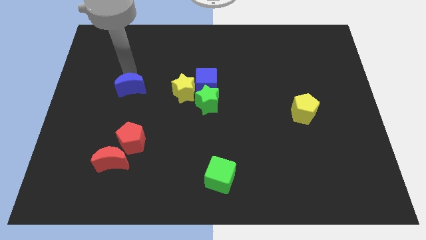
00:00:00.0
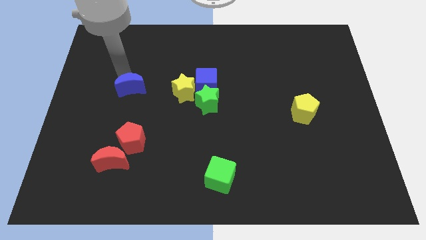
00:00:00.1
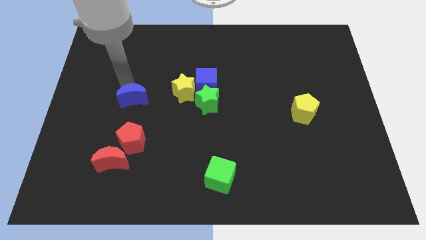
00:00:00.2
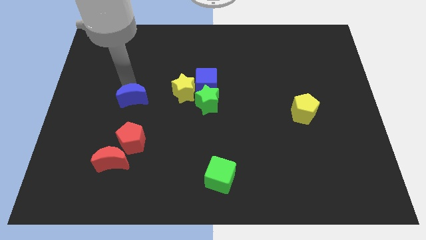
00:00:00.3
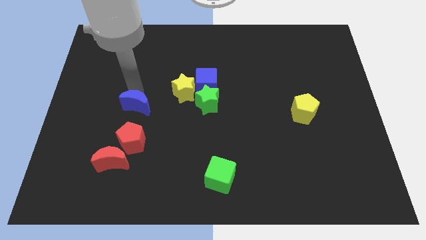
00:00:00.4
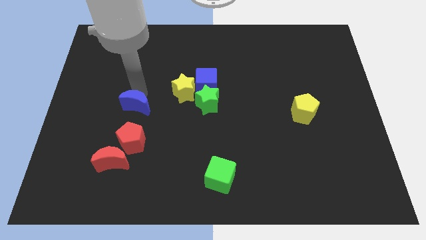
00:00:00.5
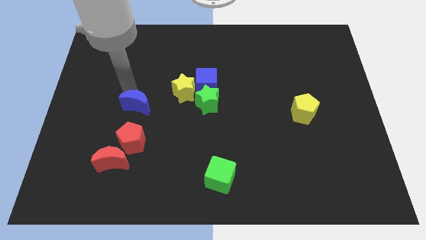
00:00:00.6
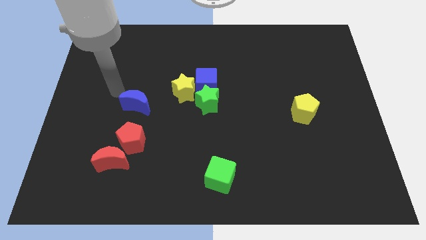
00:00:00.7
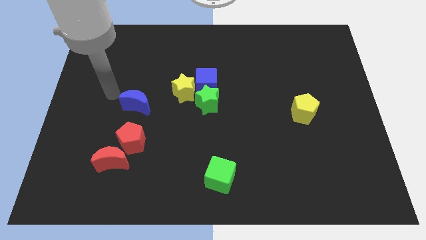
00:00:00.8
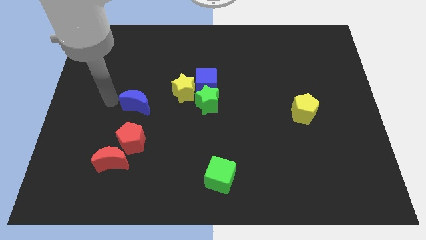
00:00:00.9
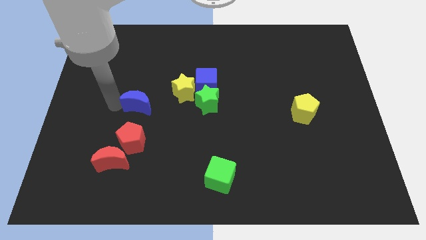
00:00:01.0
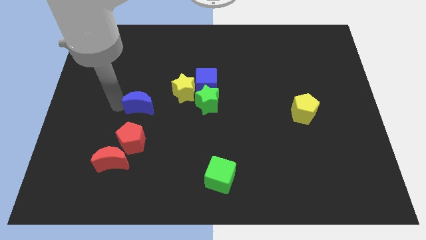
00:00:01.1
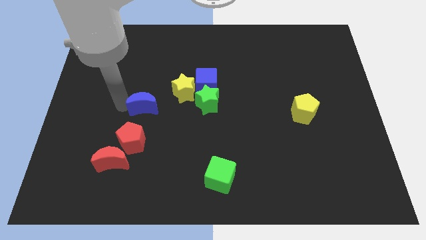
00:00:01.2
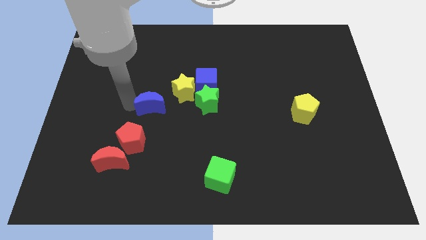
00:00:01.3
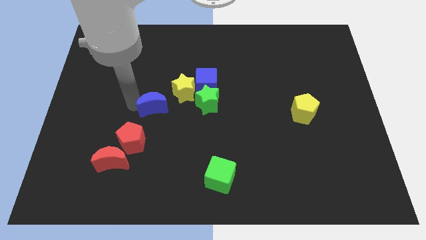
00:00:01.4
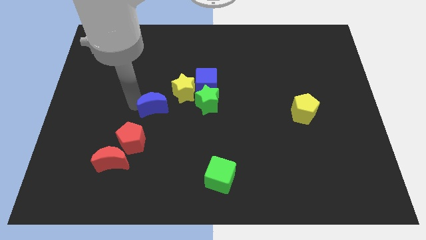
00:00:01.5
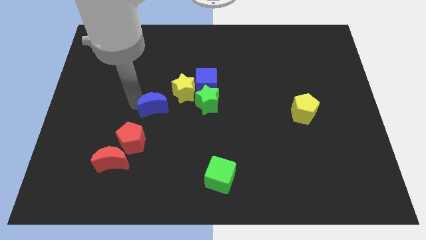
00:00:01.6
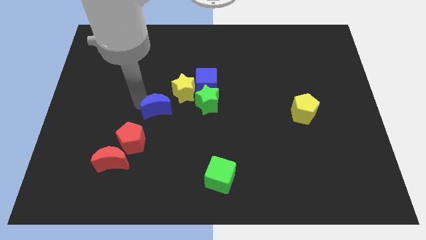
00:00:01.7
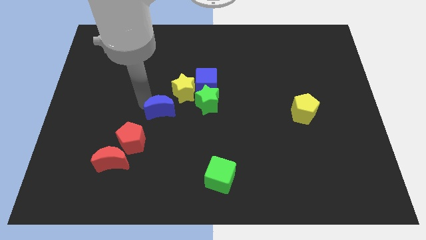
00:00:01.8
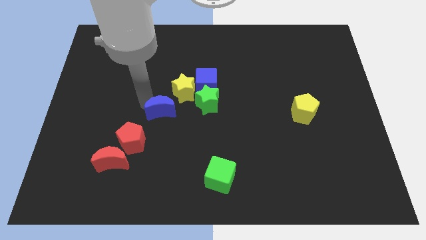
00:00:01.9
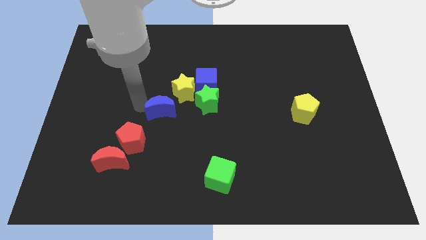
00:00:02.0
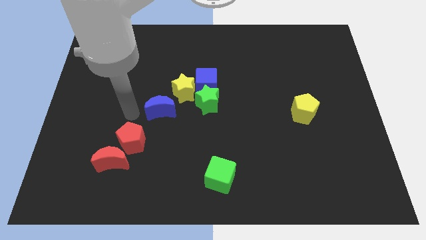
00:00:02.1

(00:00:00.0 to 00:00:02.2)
push blue crescent below yellow star

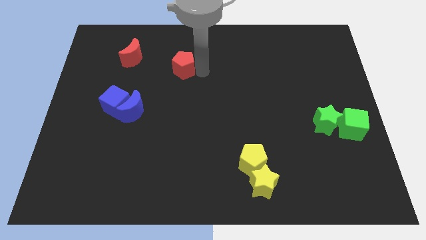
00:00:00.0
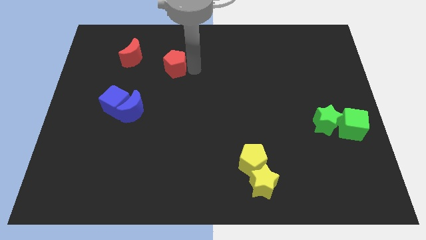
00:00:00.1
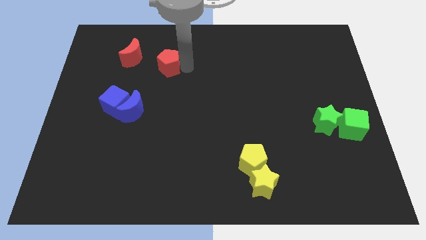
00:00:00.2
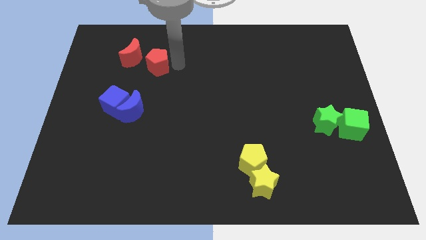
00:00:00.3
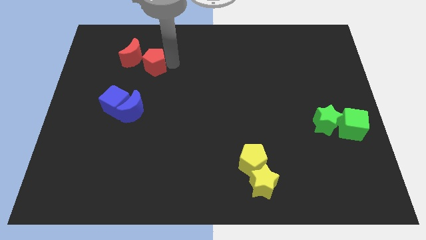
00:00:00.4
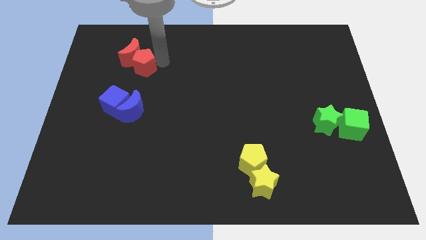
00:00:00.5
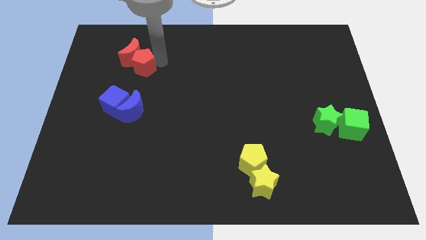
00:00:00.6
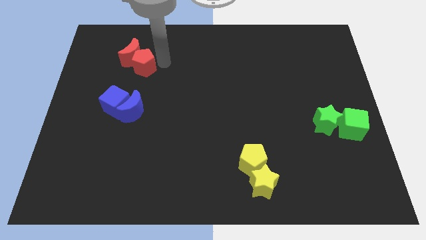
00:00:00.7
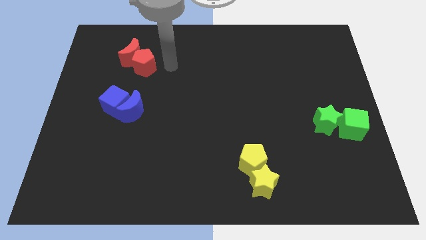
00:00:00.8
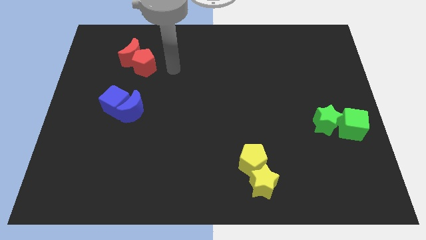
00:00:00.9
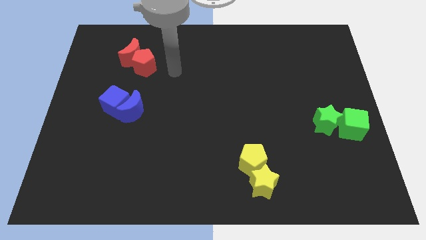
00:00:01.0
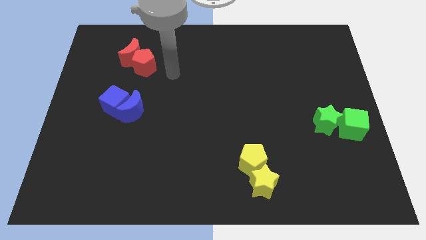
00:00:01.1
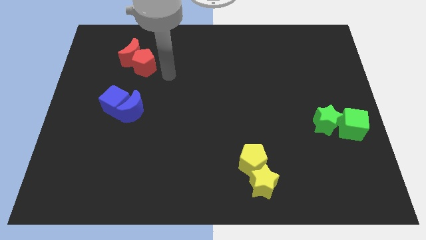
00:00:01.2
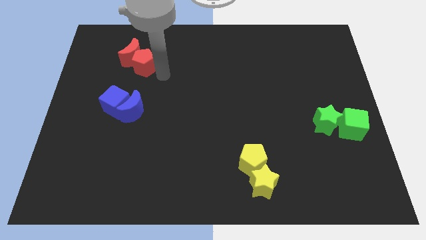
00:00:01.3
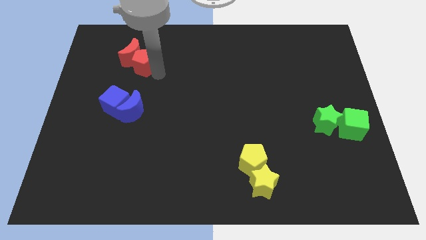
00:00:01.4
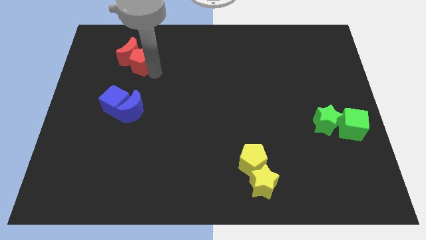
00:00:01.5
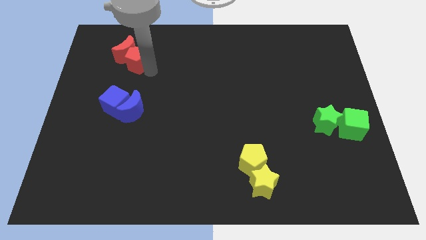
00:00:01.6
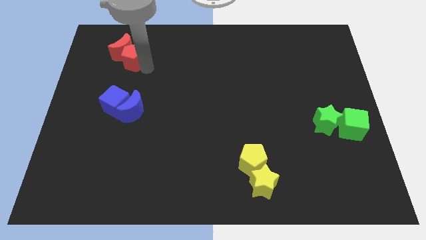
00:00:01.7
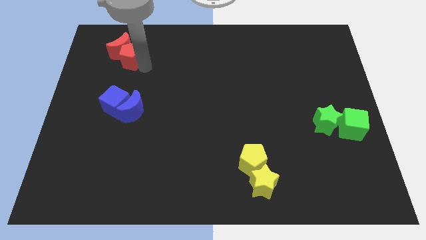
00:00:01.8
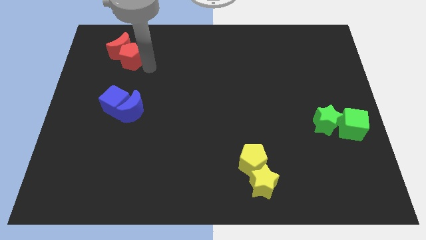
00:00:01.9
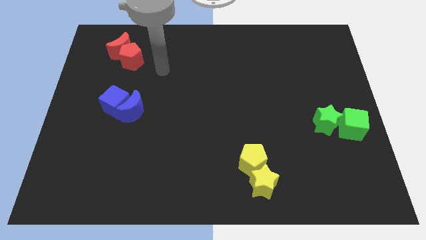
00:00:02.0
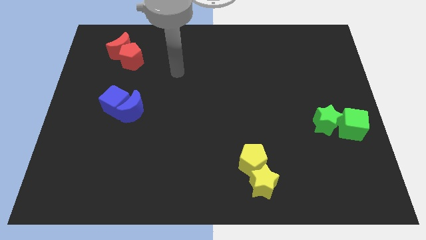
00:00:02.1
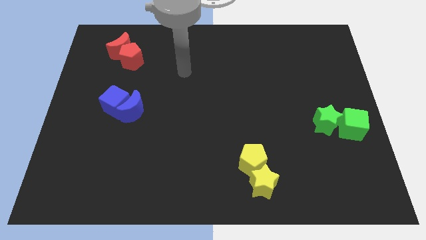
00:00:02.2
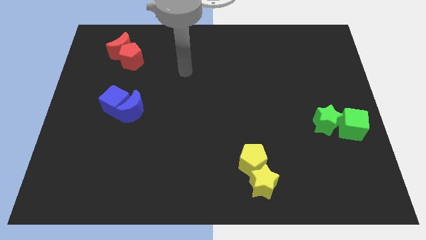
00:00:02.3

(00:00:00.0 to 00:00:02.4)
push the red pentagon into the red crescent

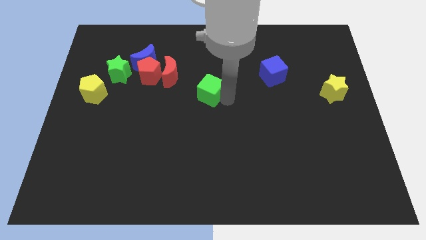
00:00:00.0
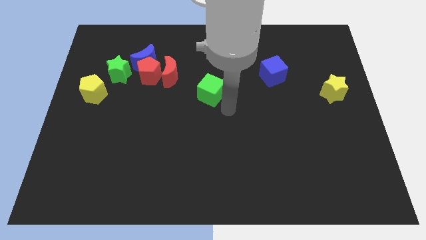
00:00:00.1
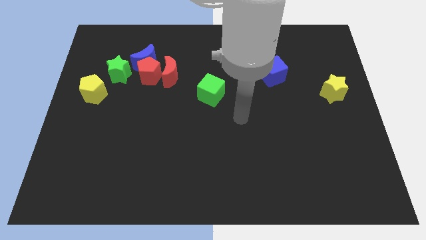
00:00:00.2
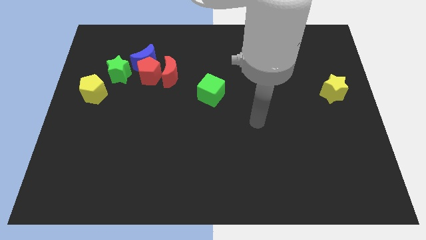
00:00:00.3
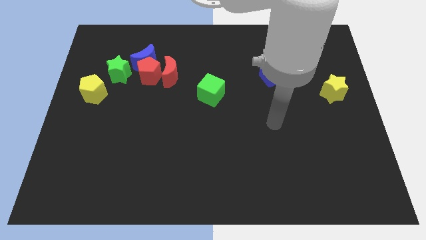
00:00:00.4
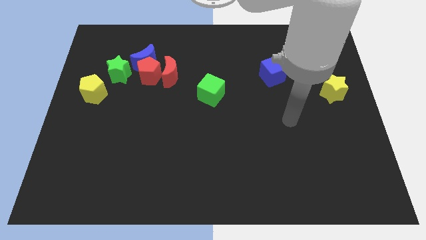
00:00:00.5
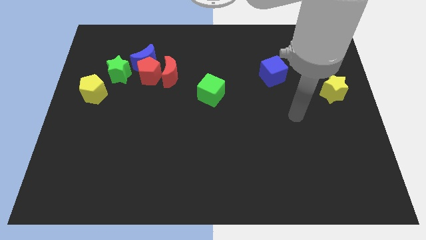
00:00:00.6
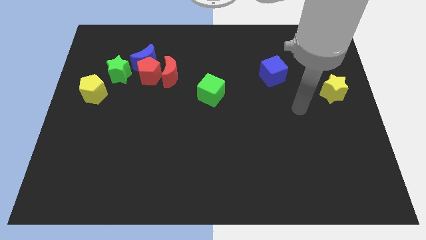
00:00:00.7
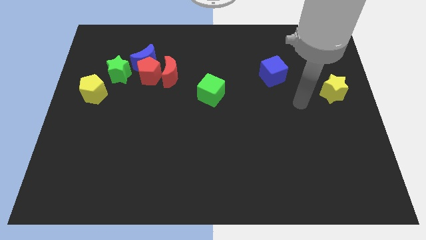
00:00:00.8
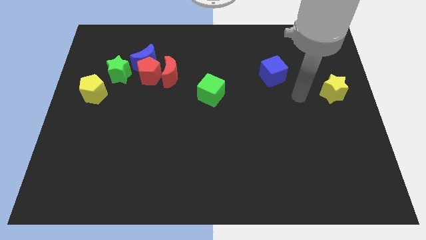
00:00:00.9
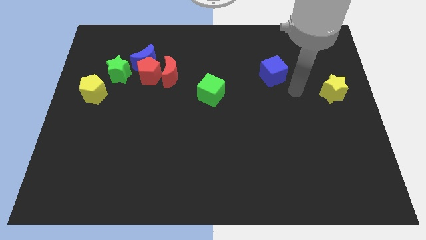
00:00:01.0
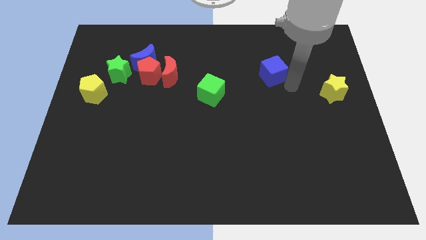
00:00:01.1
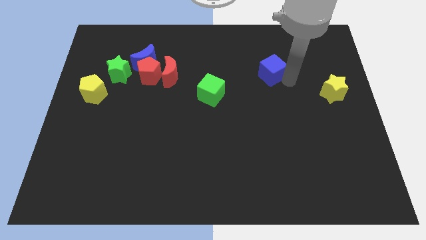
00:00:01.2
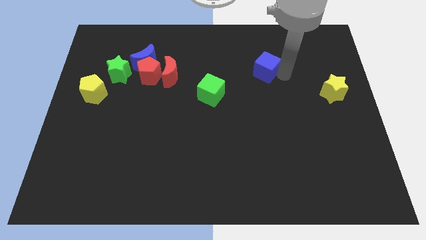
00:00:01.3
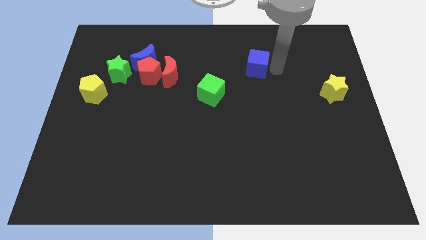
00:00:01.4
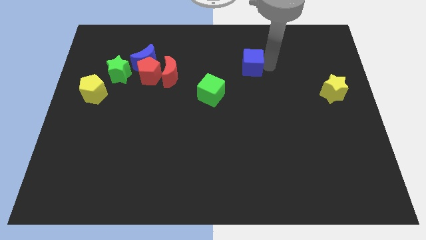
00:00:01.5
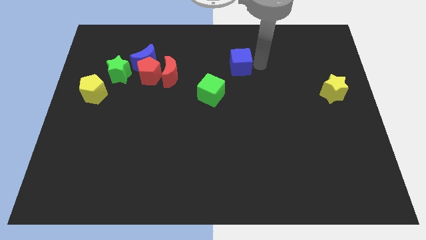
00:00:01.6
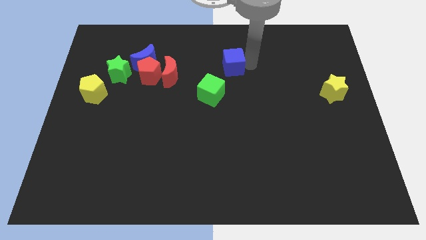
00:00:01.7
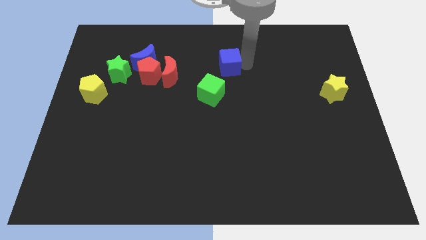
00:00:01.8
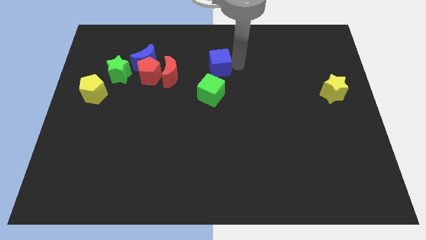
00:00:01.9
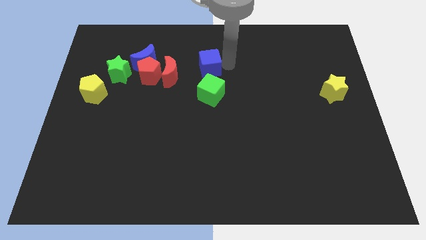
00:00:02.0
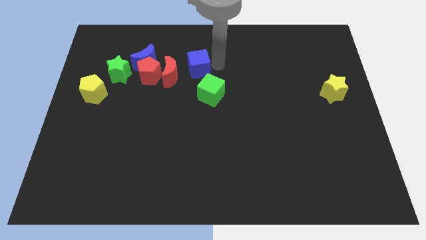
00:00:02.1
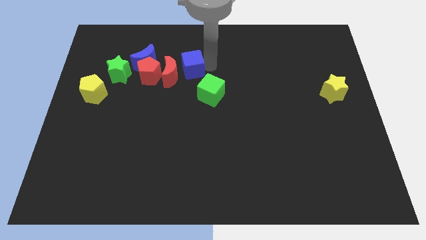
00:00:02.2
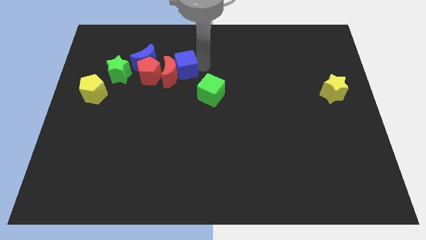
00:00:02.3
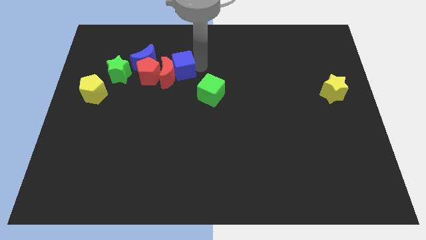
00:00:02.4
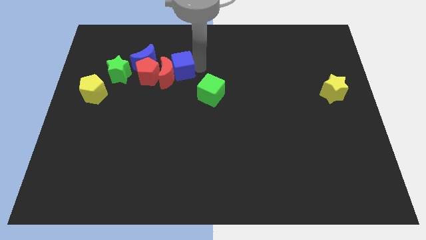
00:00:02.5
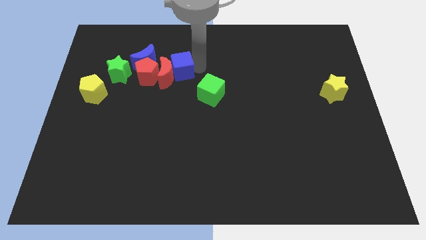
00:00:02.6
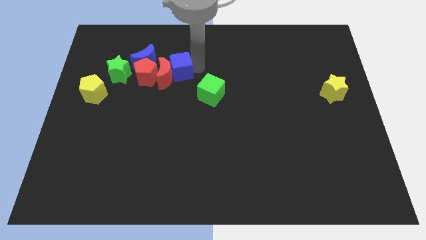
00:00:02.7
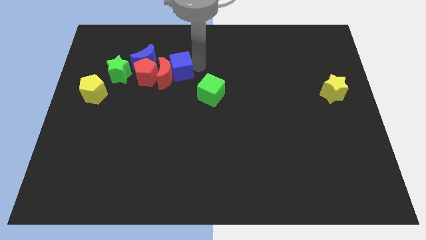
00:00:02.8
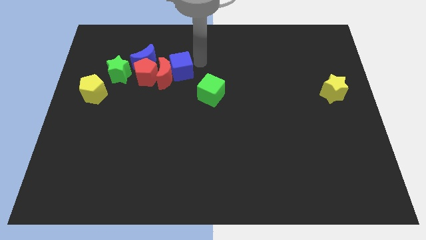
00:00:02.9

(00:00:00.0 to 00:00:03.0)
move the blue cube into the right side of the red moon

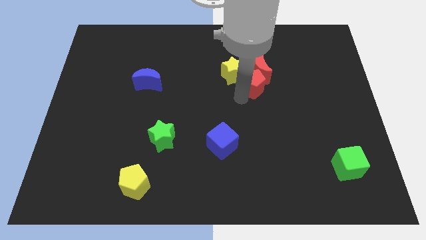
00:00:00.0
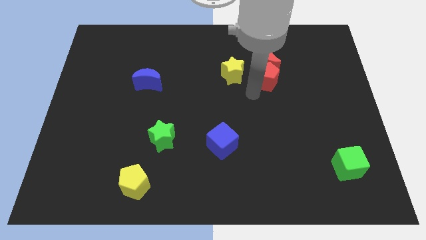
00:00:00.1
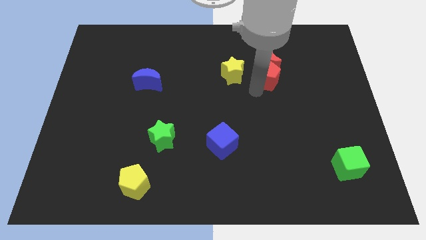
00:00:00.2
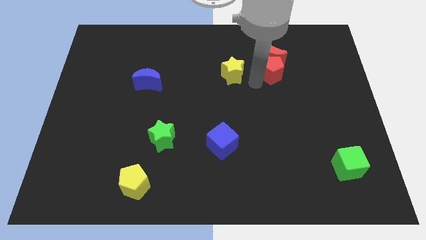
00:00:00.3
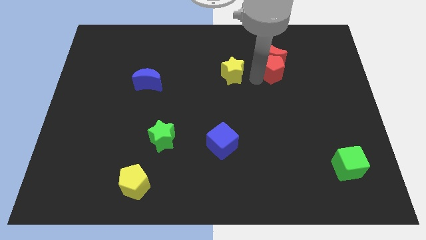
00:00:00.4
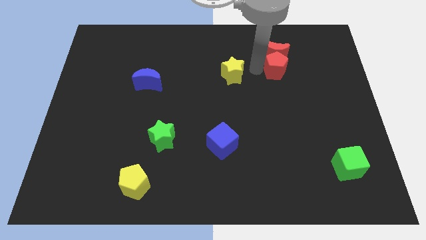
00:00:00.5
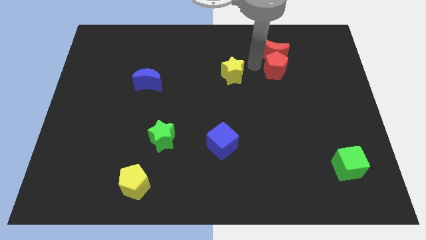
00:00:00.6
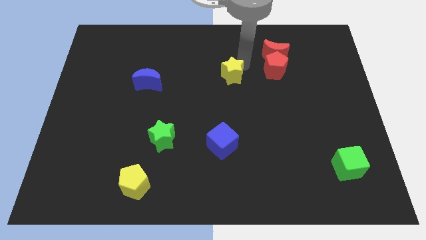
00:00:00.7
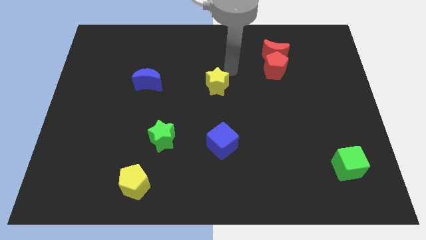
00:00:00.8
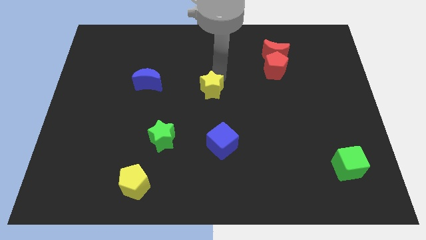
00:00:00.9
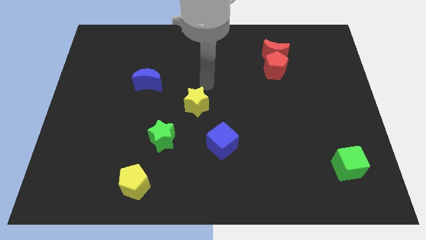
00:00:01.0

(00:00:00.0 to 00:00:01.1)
slide the yellow star towards the green star

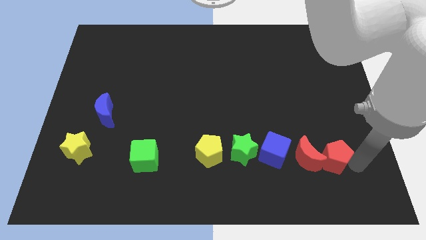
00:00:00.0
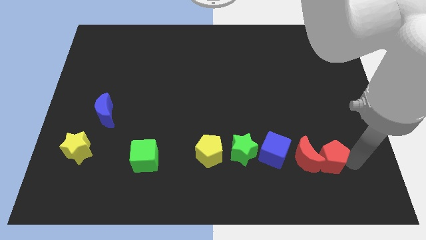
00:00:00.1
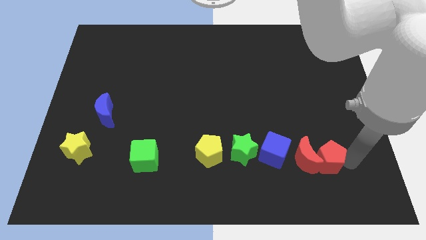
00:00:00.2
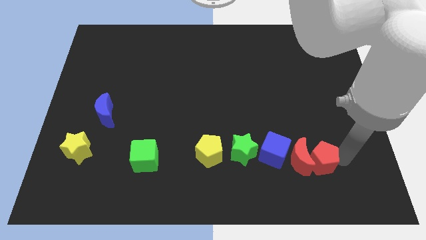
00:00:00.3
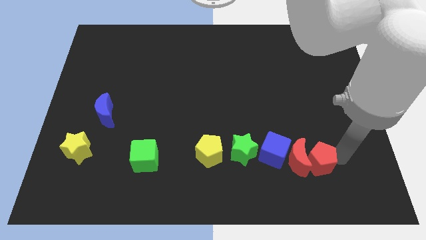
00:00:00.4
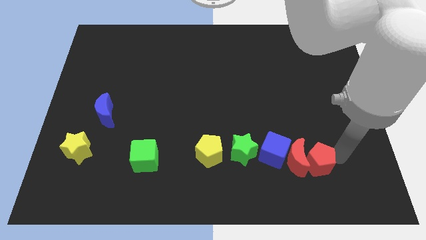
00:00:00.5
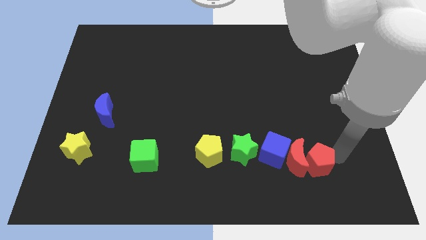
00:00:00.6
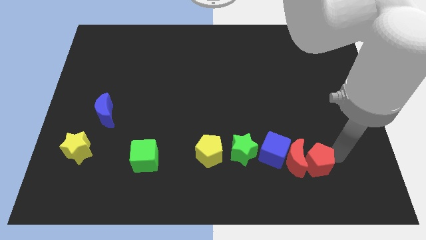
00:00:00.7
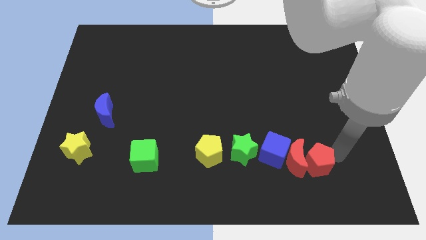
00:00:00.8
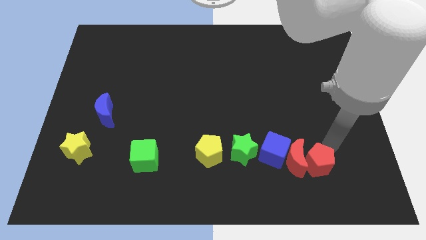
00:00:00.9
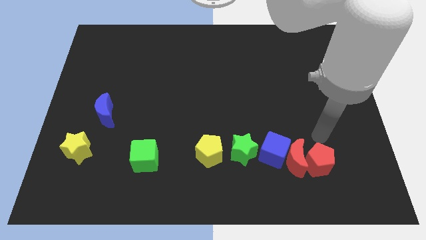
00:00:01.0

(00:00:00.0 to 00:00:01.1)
push the red pentagon into the red moon
